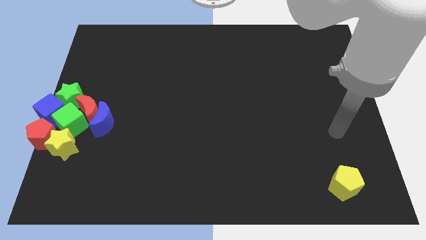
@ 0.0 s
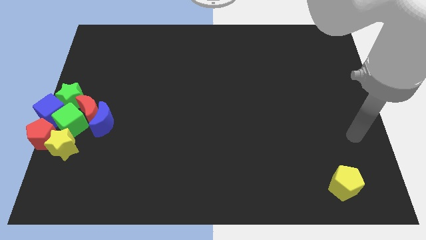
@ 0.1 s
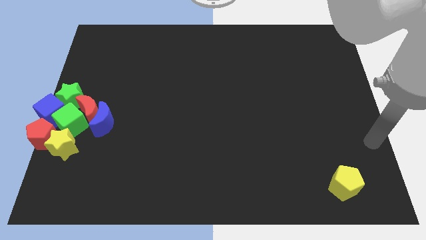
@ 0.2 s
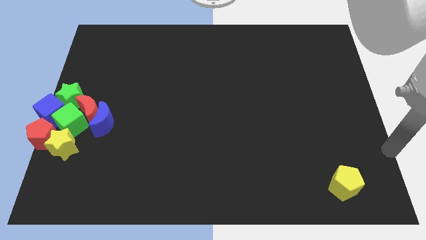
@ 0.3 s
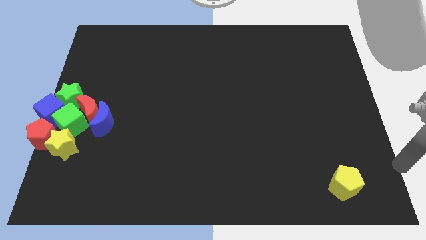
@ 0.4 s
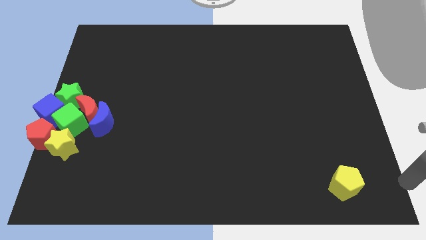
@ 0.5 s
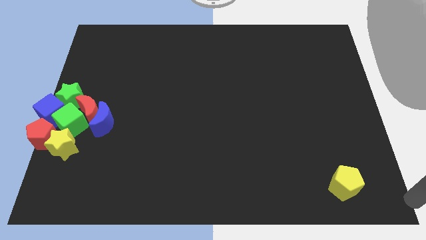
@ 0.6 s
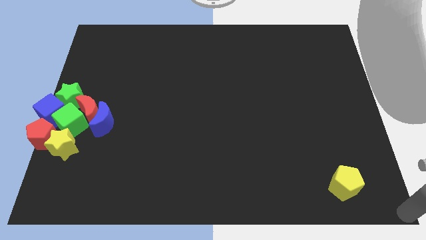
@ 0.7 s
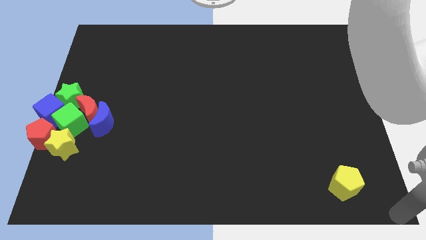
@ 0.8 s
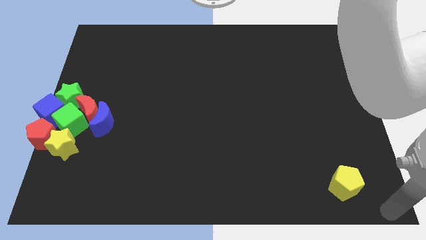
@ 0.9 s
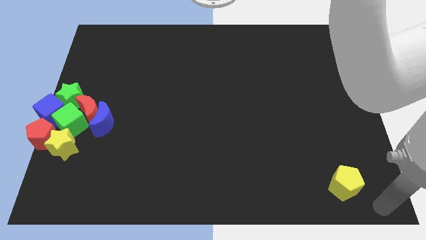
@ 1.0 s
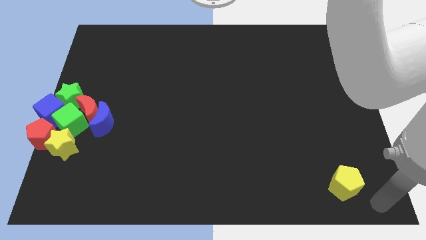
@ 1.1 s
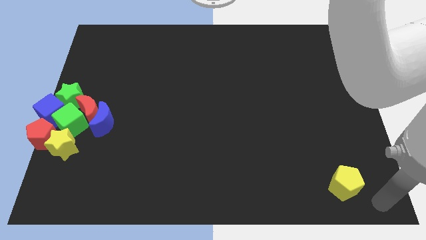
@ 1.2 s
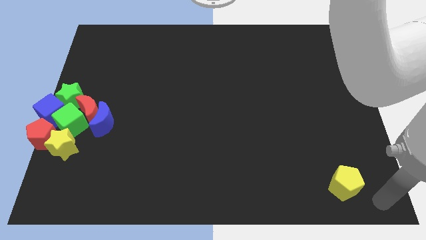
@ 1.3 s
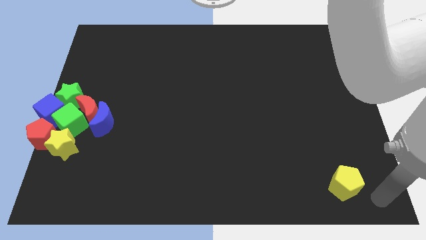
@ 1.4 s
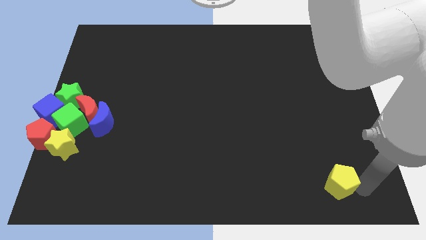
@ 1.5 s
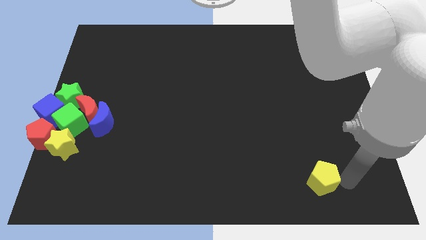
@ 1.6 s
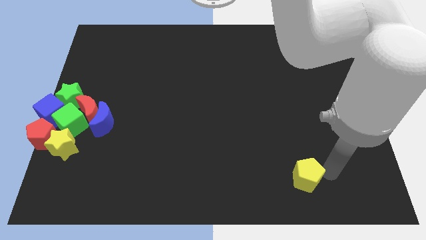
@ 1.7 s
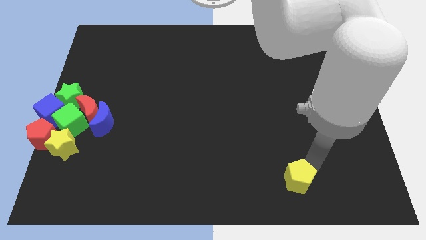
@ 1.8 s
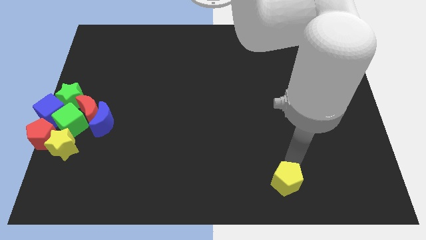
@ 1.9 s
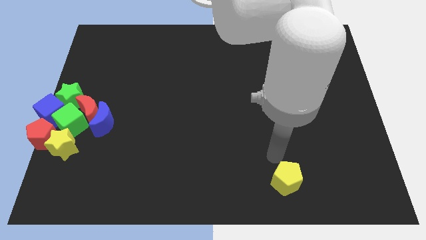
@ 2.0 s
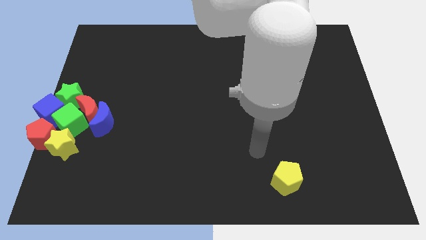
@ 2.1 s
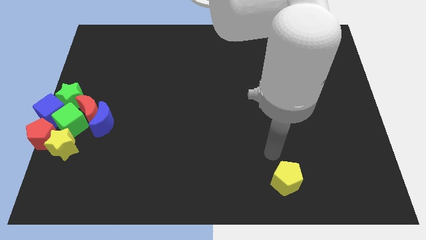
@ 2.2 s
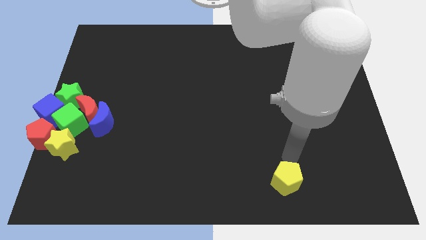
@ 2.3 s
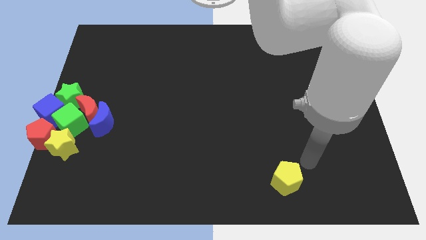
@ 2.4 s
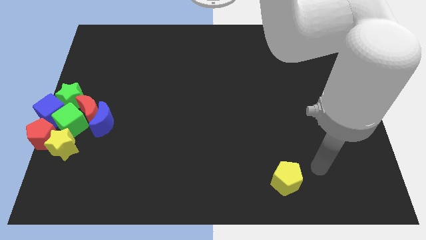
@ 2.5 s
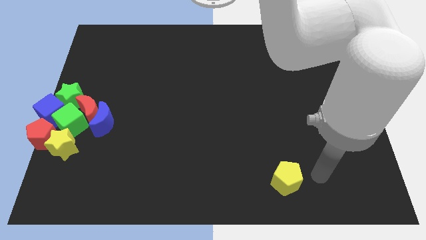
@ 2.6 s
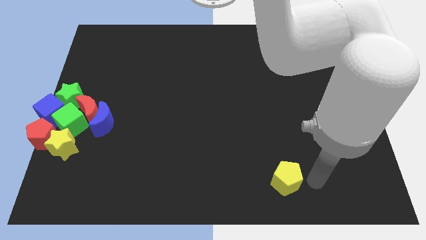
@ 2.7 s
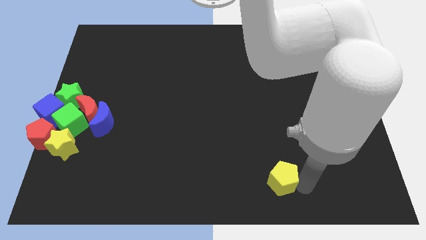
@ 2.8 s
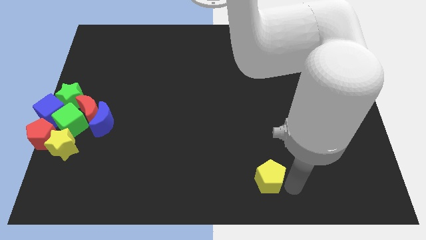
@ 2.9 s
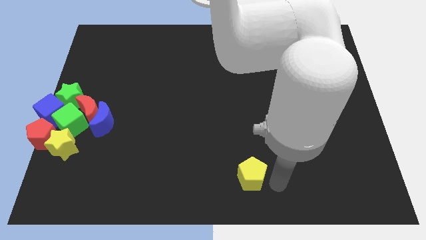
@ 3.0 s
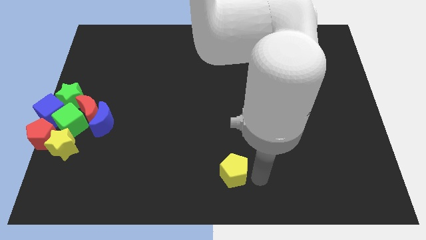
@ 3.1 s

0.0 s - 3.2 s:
move yellow pentagon towards the center

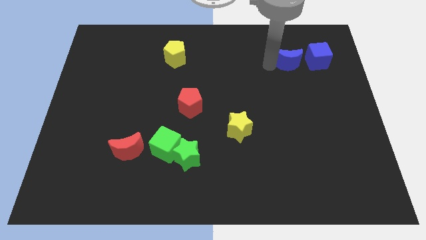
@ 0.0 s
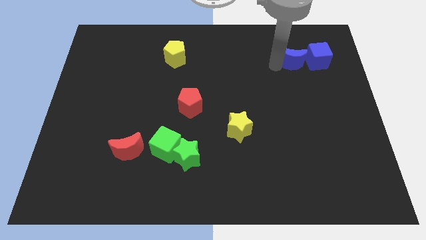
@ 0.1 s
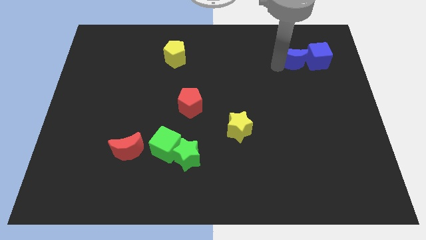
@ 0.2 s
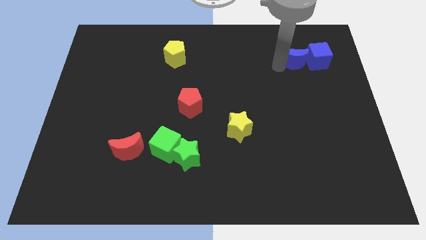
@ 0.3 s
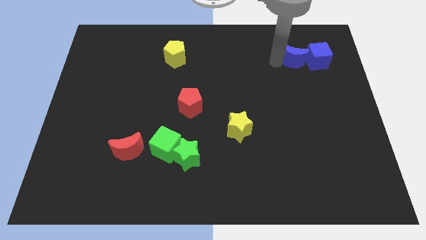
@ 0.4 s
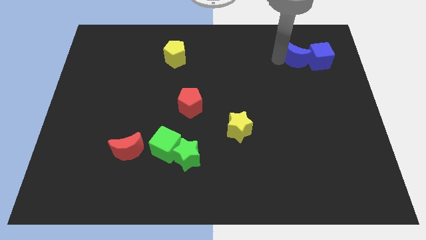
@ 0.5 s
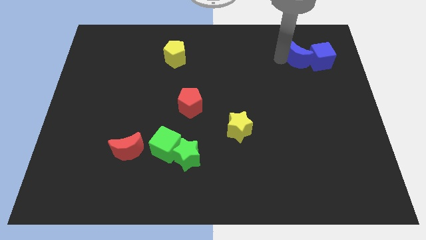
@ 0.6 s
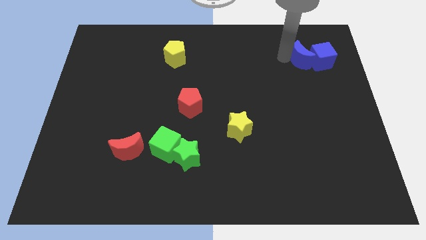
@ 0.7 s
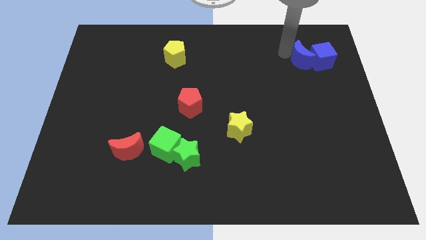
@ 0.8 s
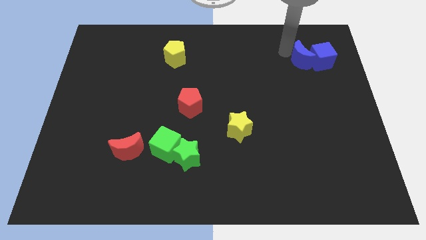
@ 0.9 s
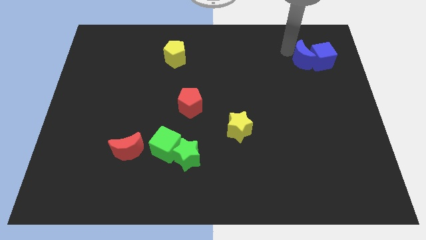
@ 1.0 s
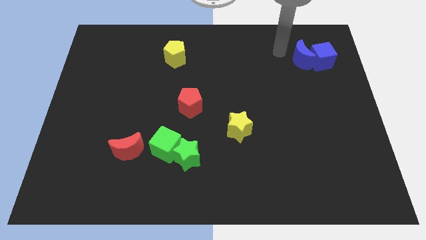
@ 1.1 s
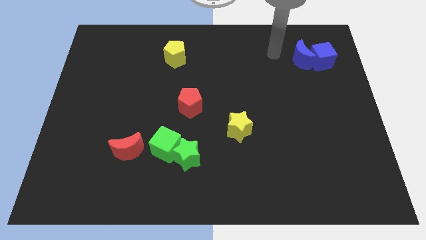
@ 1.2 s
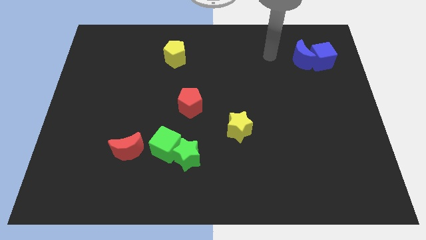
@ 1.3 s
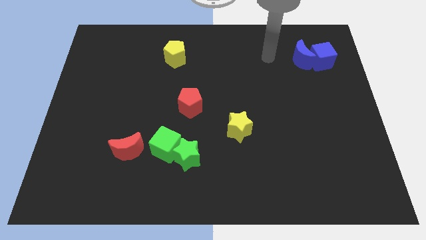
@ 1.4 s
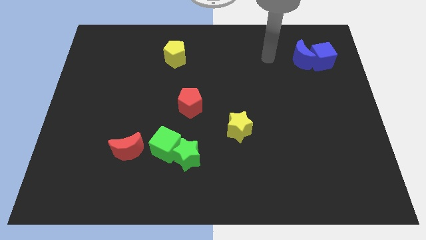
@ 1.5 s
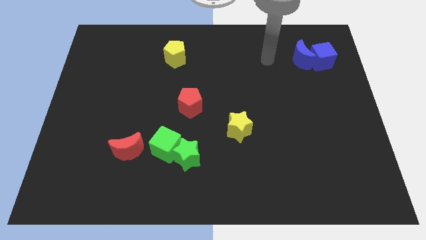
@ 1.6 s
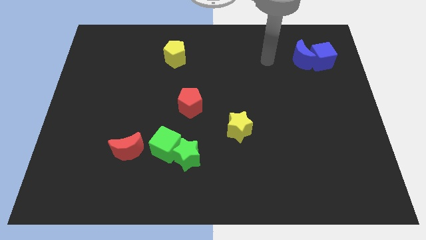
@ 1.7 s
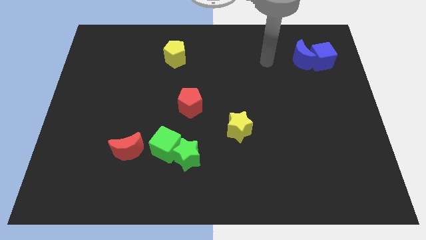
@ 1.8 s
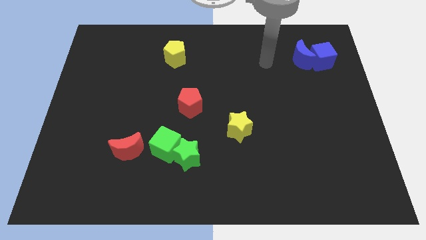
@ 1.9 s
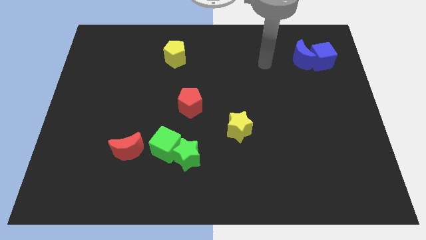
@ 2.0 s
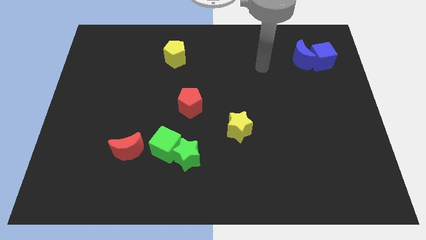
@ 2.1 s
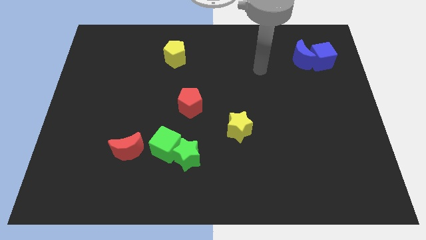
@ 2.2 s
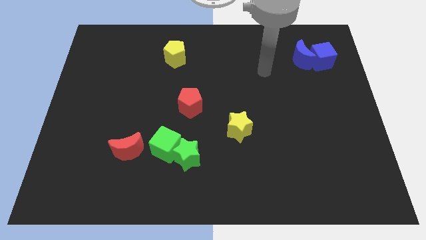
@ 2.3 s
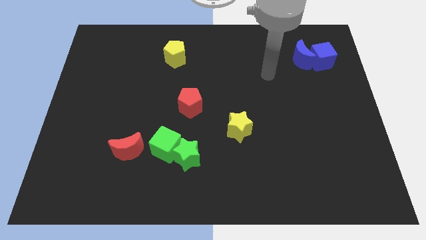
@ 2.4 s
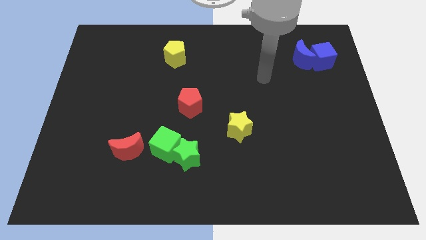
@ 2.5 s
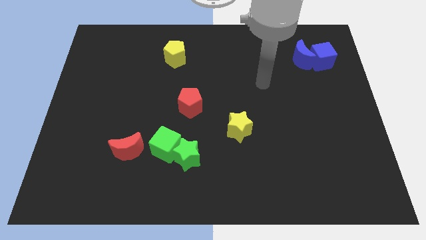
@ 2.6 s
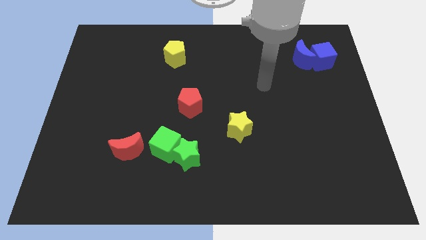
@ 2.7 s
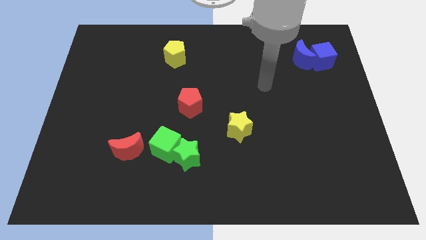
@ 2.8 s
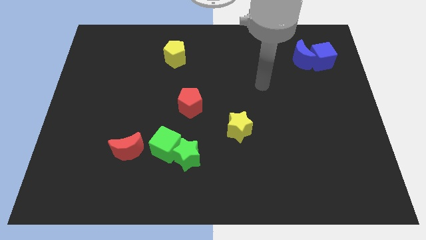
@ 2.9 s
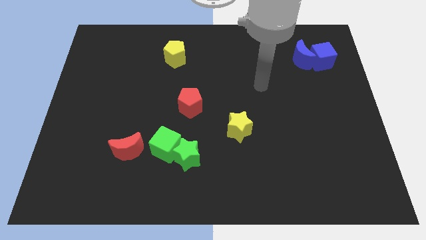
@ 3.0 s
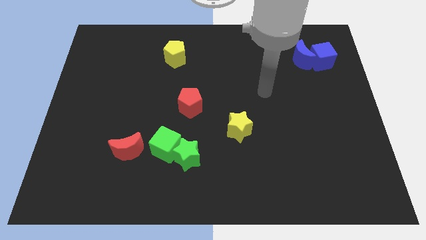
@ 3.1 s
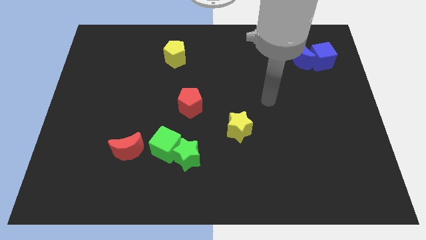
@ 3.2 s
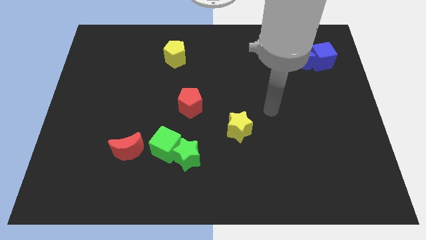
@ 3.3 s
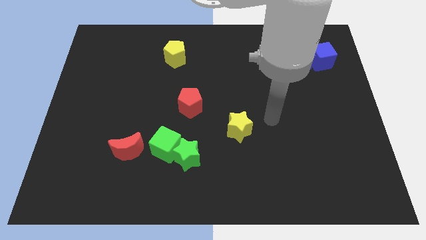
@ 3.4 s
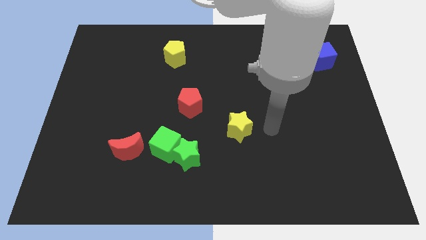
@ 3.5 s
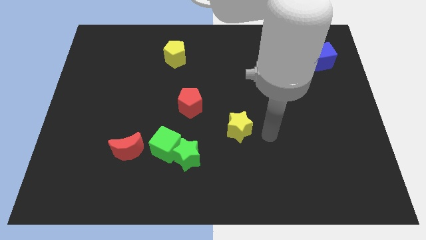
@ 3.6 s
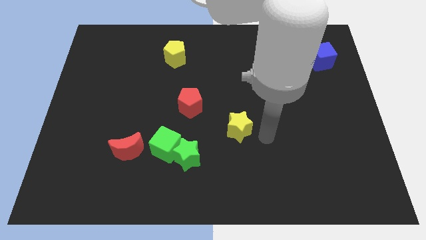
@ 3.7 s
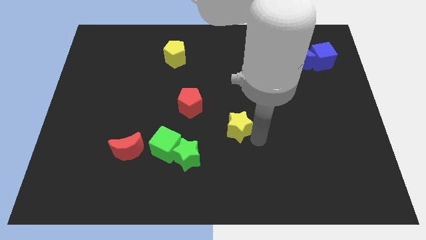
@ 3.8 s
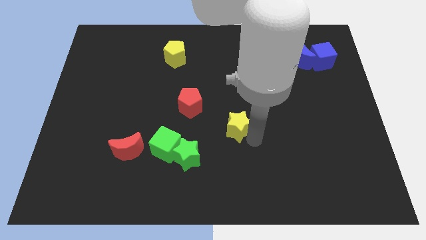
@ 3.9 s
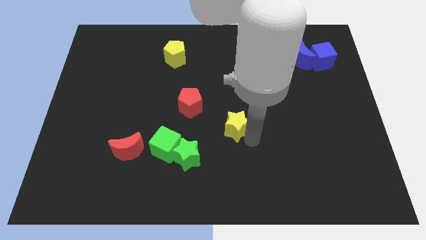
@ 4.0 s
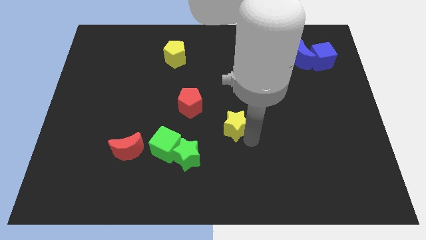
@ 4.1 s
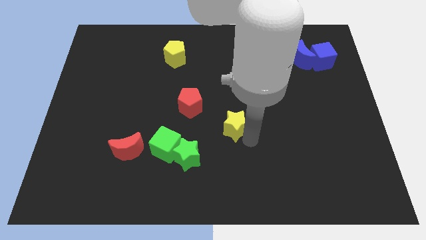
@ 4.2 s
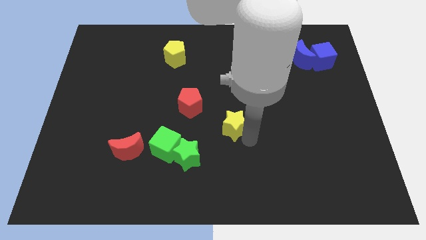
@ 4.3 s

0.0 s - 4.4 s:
slightly move the yellow star towards the red pentagon

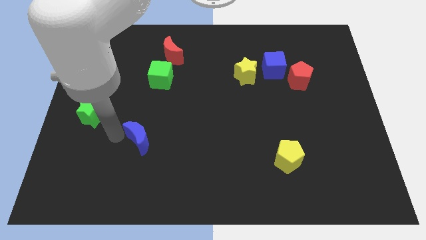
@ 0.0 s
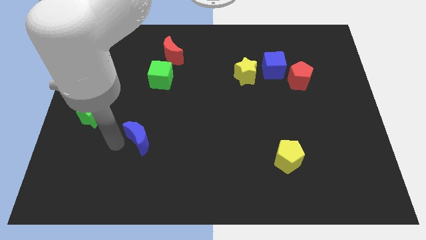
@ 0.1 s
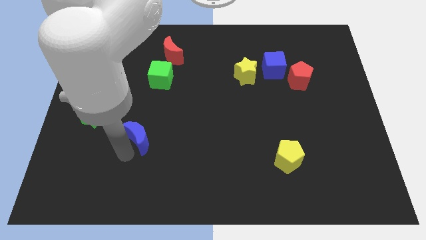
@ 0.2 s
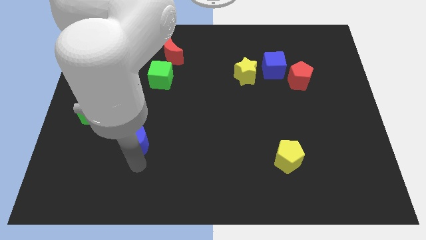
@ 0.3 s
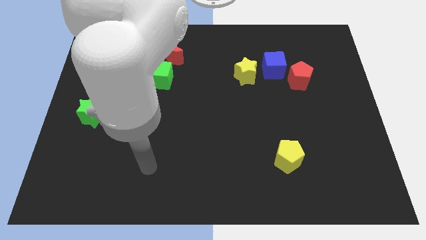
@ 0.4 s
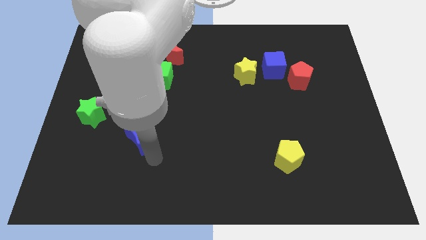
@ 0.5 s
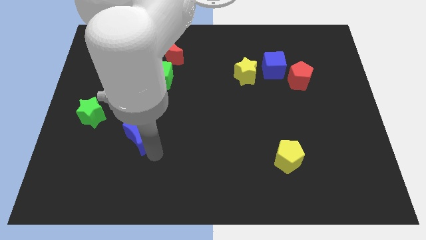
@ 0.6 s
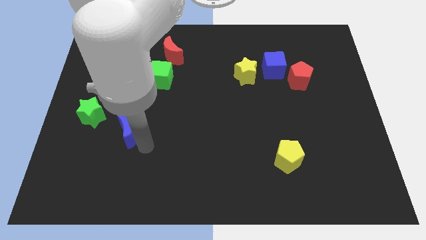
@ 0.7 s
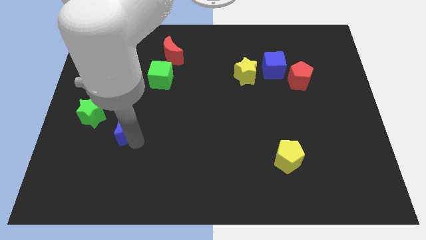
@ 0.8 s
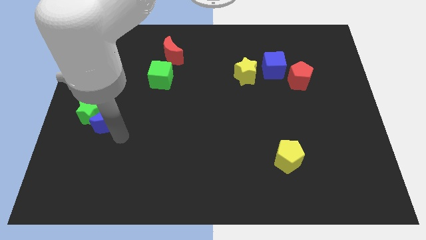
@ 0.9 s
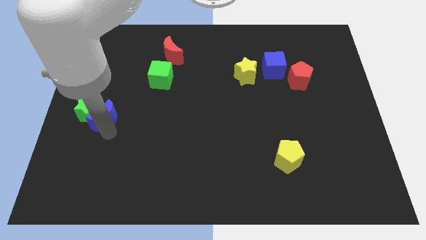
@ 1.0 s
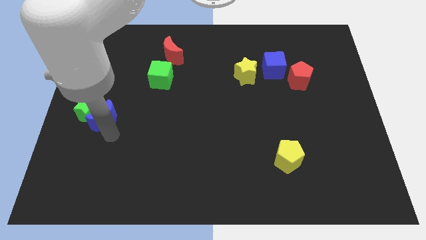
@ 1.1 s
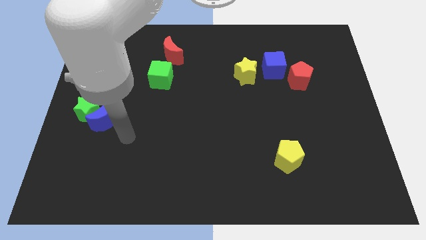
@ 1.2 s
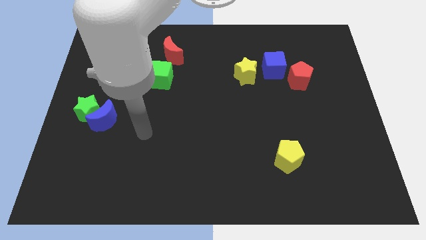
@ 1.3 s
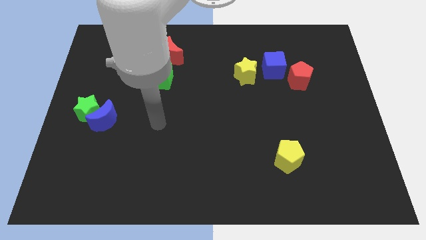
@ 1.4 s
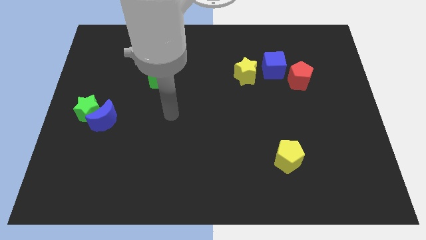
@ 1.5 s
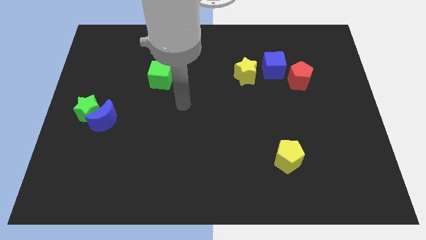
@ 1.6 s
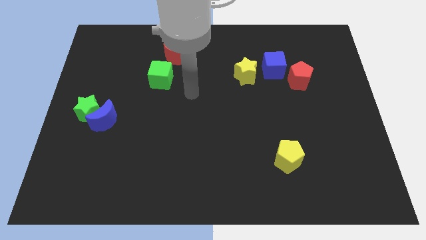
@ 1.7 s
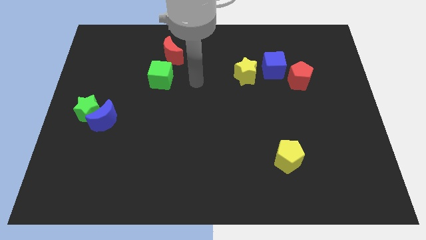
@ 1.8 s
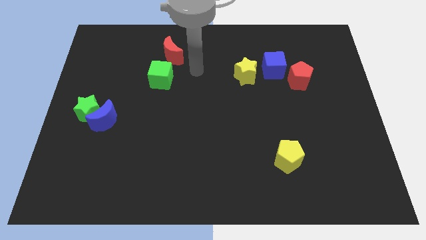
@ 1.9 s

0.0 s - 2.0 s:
push the blue moon into the green star
